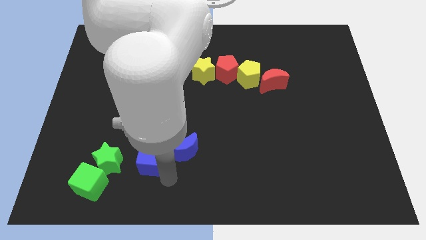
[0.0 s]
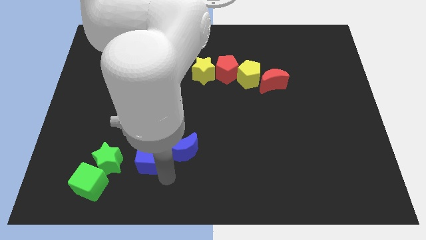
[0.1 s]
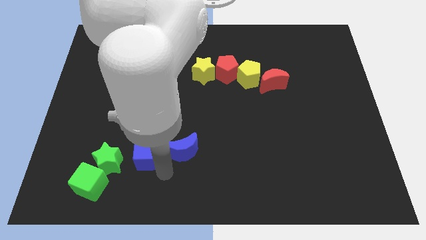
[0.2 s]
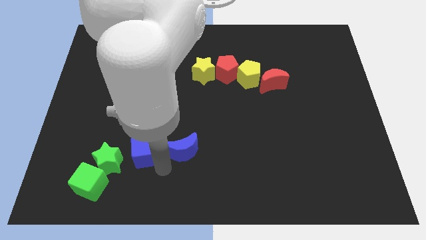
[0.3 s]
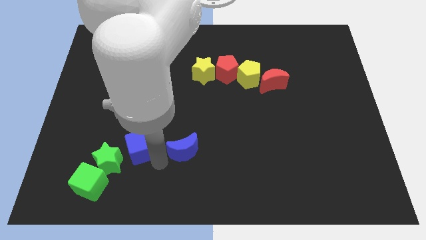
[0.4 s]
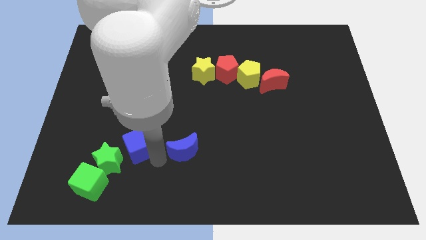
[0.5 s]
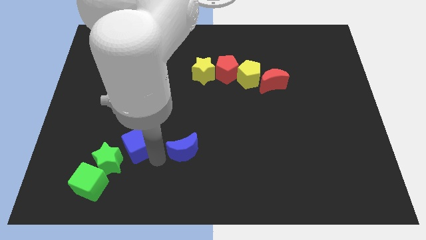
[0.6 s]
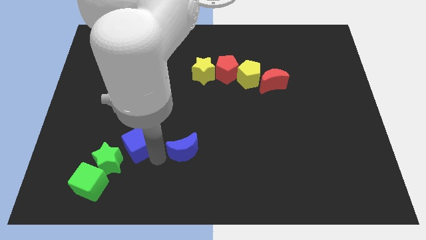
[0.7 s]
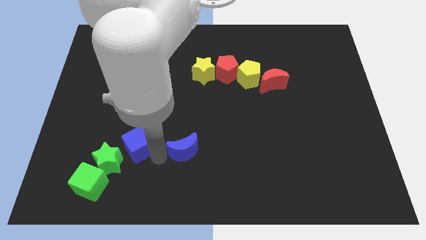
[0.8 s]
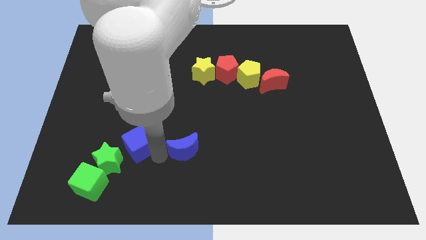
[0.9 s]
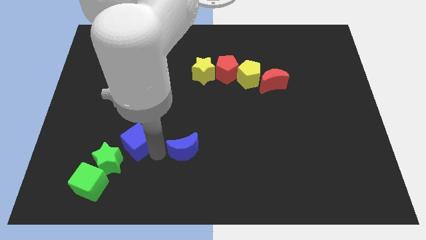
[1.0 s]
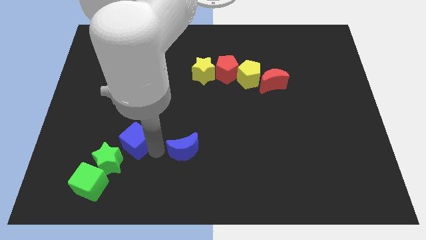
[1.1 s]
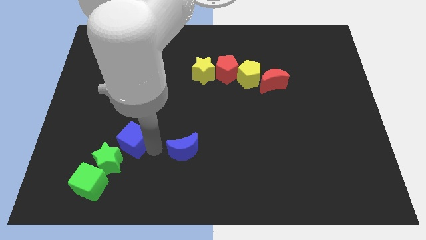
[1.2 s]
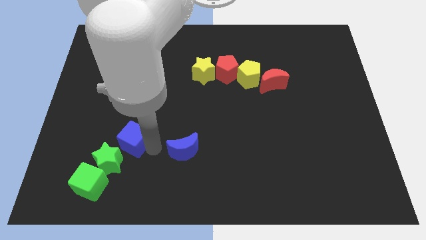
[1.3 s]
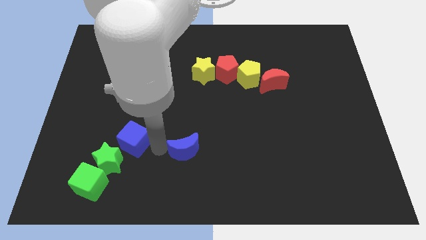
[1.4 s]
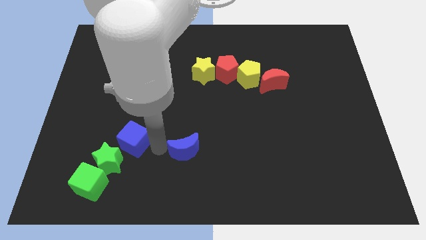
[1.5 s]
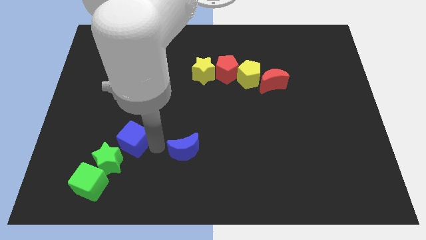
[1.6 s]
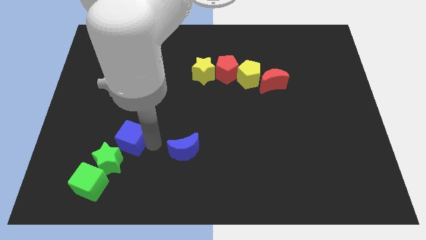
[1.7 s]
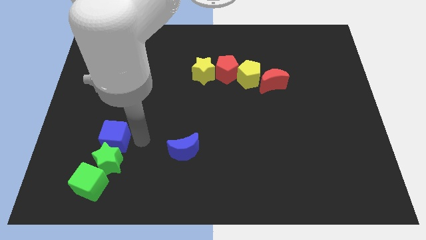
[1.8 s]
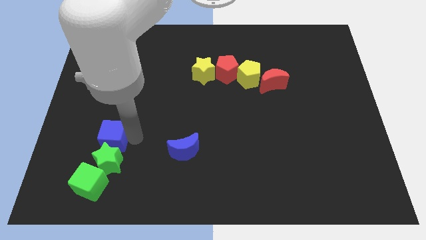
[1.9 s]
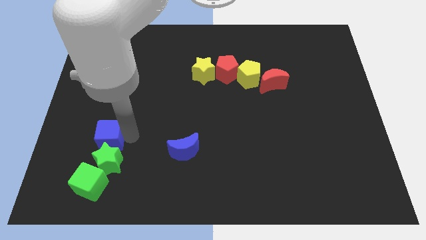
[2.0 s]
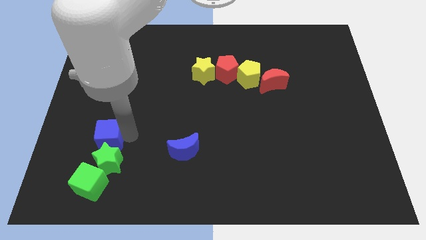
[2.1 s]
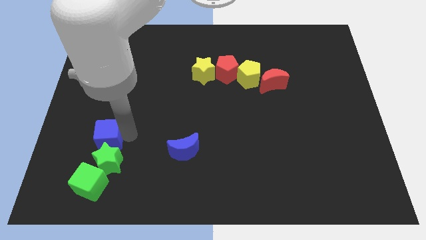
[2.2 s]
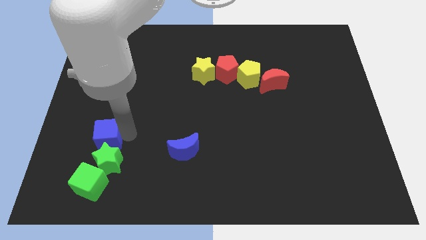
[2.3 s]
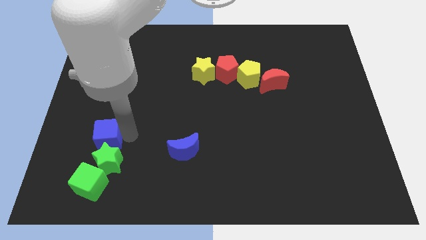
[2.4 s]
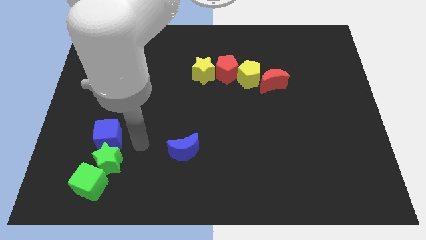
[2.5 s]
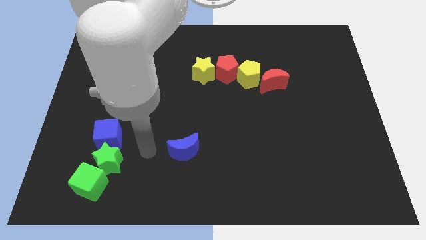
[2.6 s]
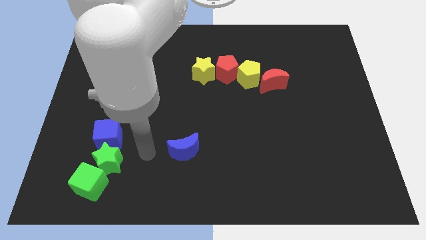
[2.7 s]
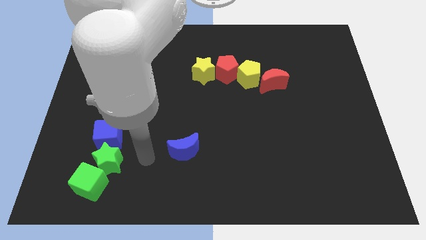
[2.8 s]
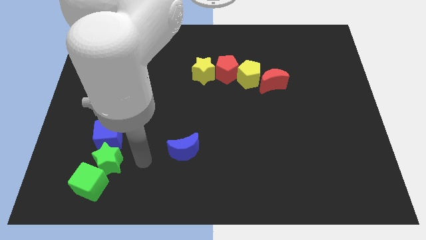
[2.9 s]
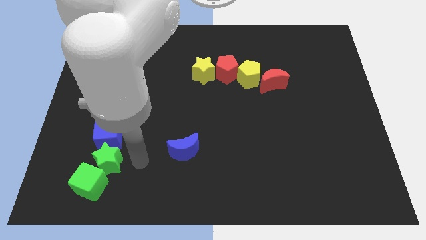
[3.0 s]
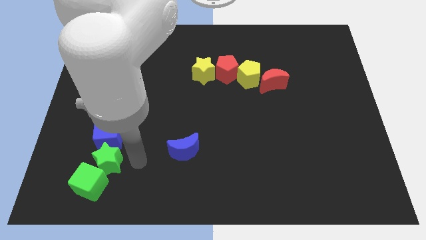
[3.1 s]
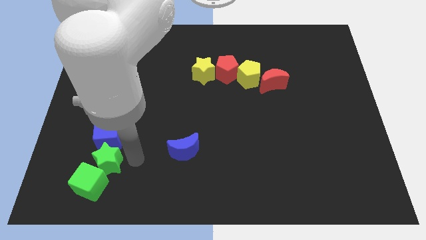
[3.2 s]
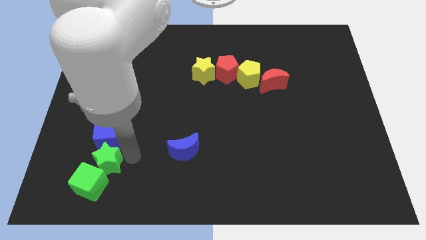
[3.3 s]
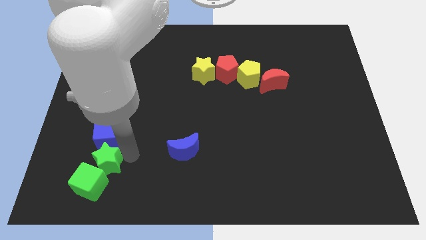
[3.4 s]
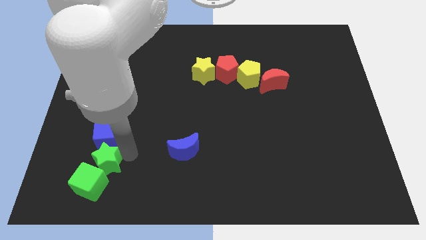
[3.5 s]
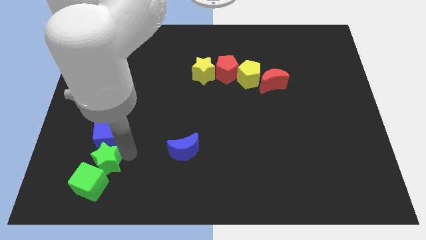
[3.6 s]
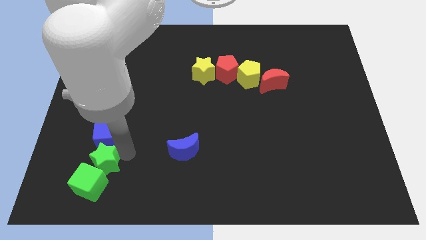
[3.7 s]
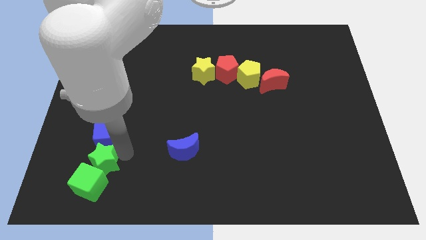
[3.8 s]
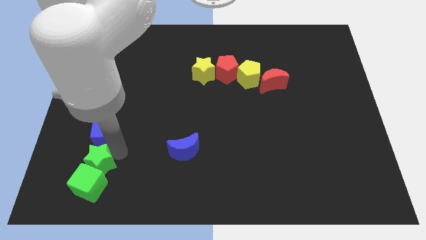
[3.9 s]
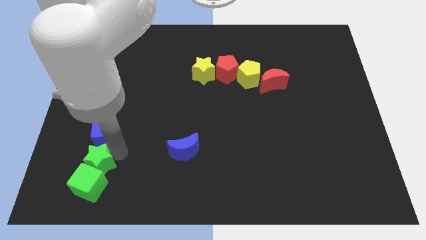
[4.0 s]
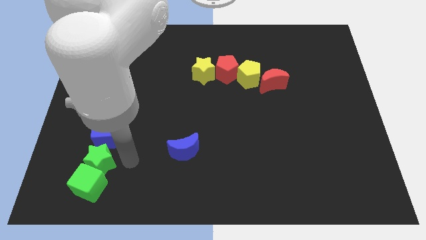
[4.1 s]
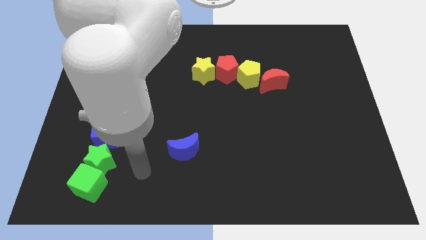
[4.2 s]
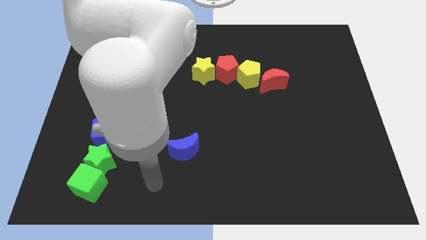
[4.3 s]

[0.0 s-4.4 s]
slightly drag the blue cube towards the left side up to the green star

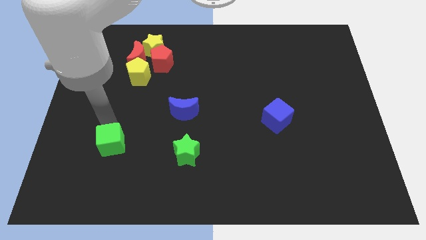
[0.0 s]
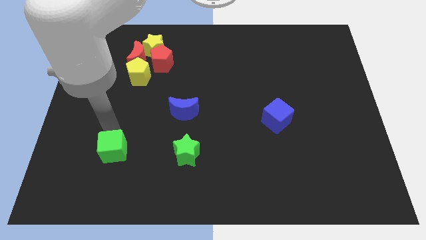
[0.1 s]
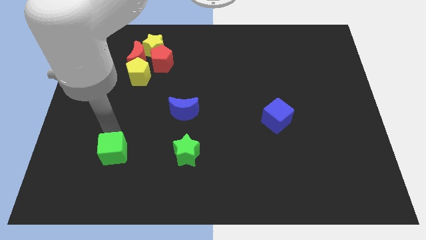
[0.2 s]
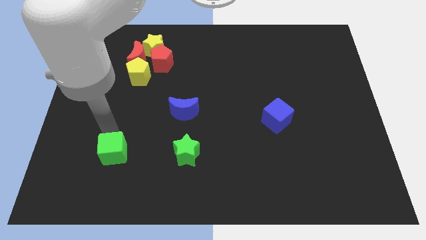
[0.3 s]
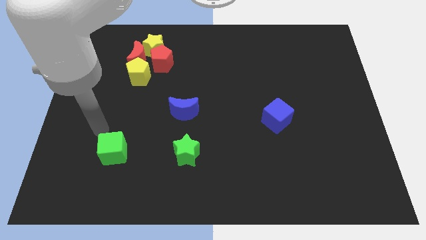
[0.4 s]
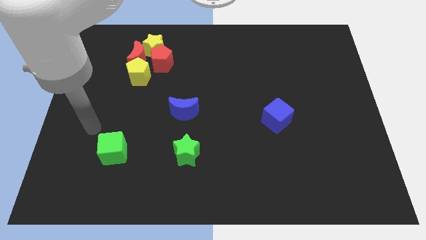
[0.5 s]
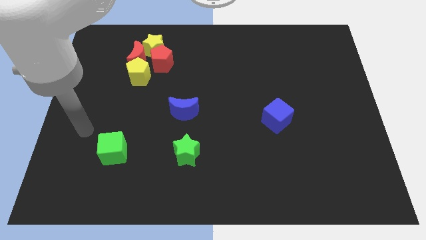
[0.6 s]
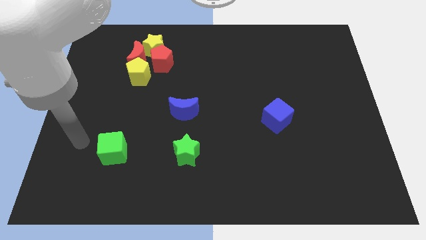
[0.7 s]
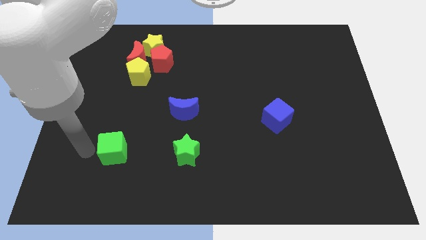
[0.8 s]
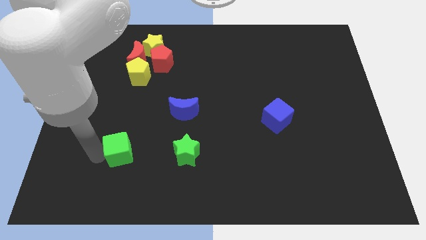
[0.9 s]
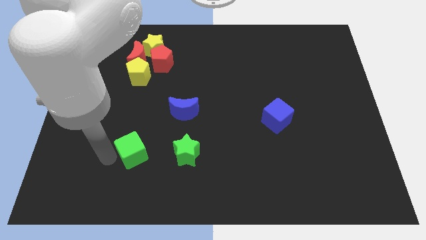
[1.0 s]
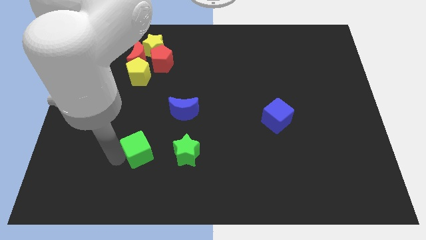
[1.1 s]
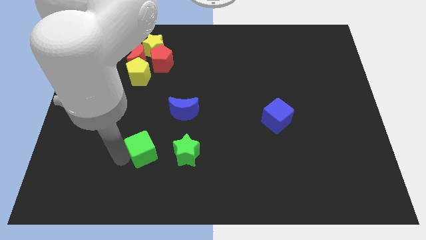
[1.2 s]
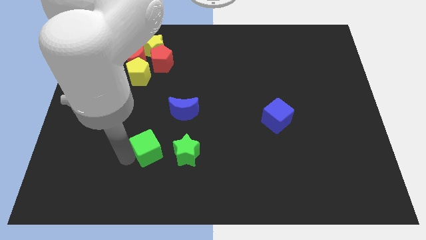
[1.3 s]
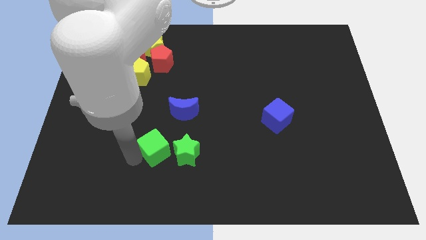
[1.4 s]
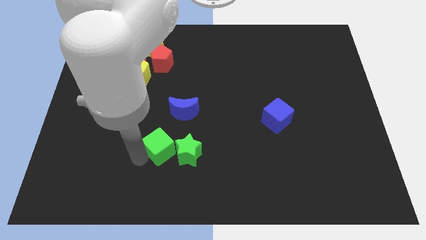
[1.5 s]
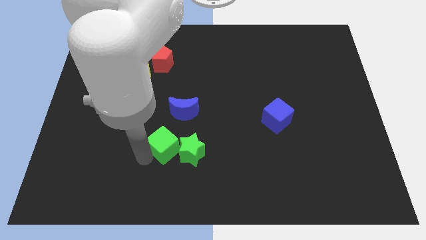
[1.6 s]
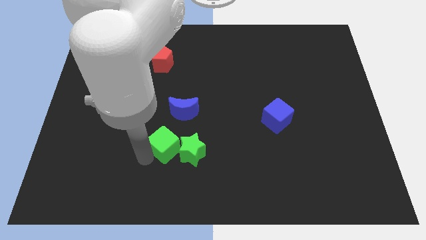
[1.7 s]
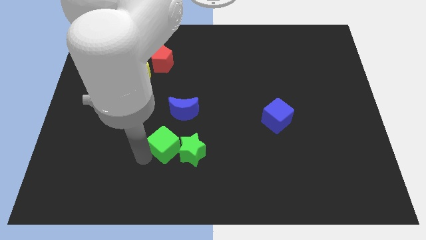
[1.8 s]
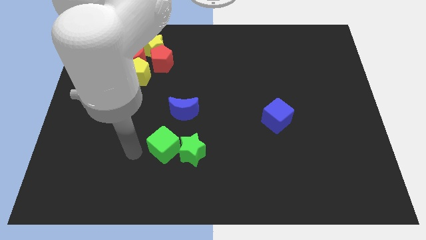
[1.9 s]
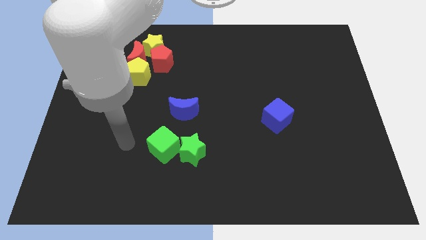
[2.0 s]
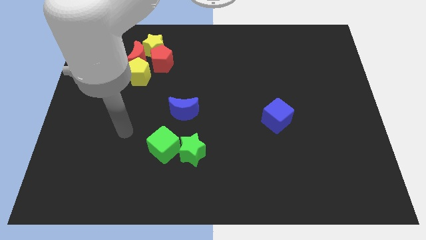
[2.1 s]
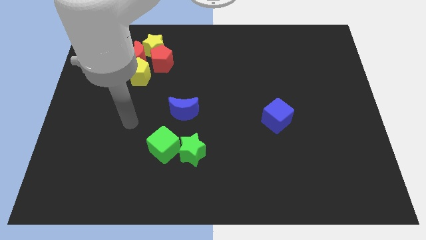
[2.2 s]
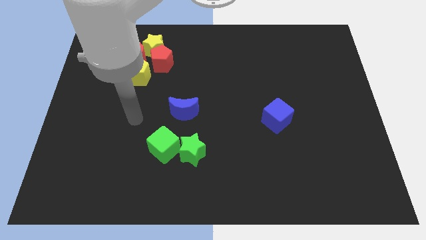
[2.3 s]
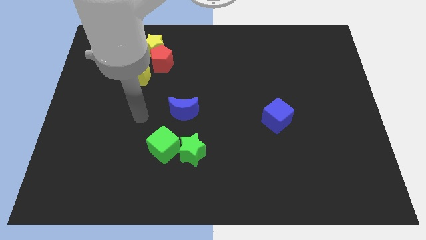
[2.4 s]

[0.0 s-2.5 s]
push green cube towards green star

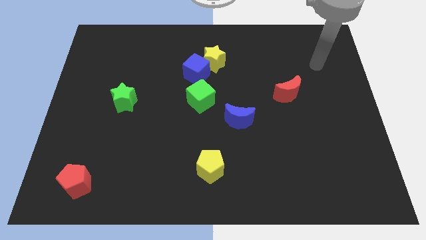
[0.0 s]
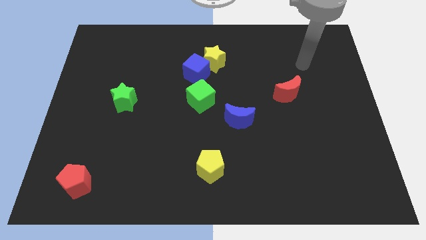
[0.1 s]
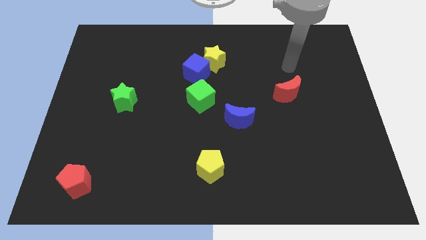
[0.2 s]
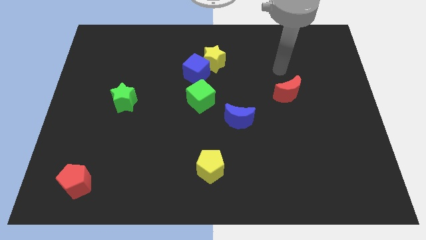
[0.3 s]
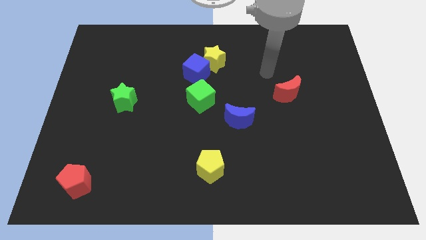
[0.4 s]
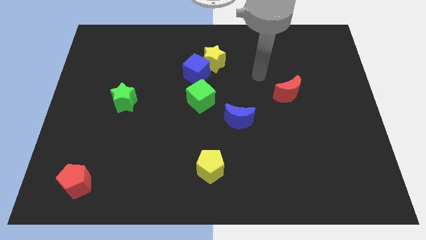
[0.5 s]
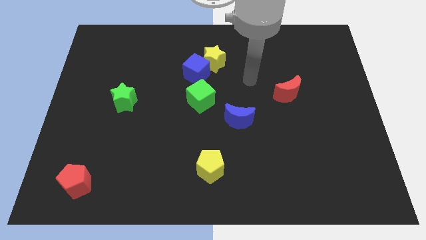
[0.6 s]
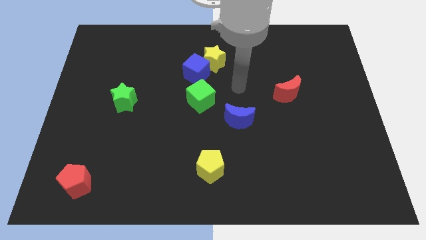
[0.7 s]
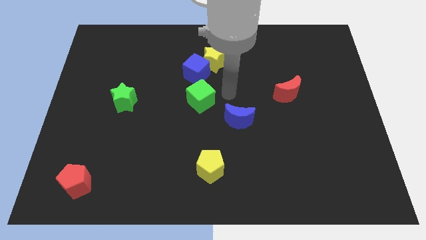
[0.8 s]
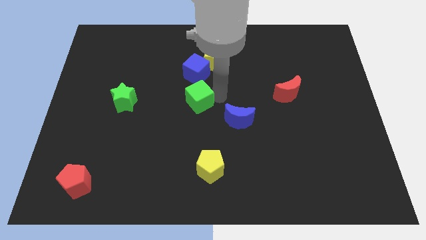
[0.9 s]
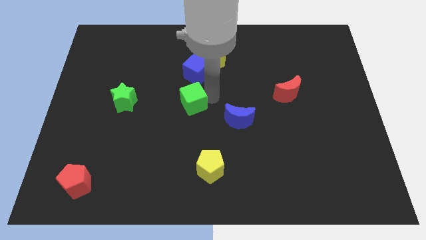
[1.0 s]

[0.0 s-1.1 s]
move the arm towards the green cube

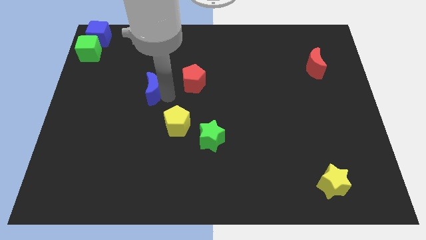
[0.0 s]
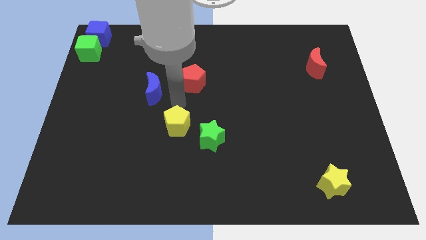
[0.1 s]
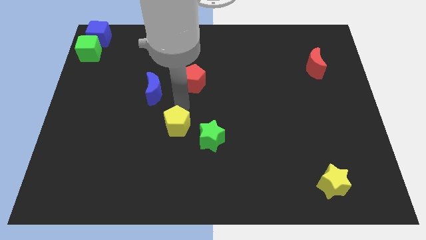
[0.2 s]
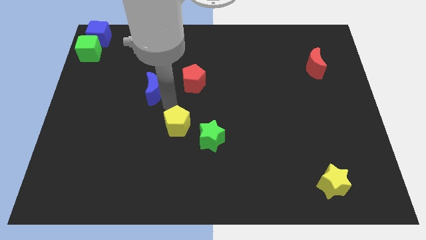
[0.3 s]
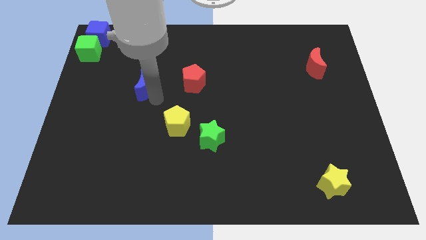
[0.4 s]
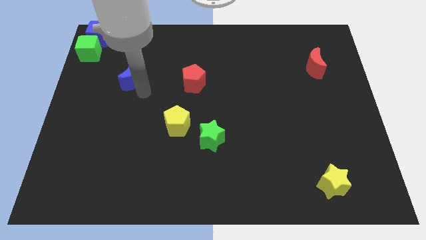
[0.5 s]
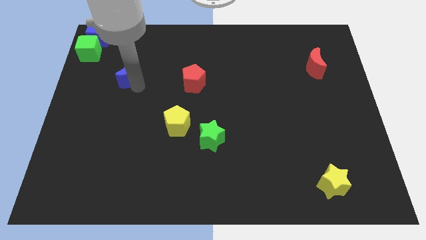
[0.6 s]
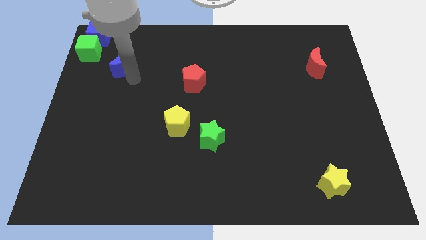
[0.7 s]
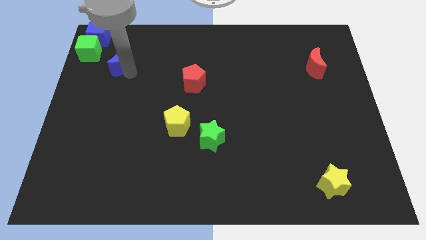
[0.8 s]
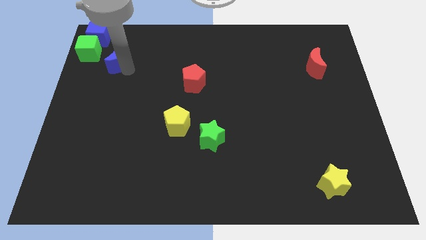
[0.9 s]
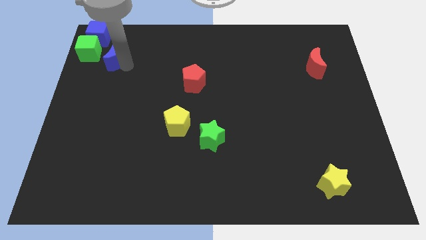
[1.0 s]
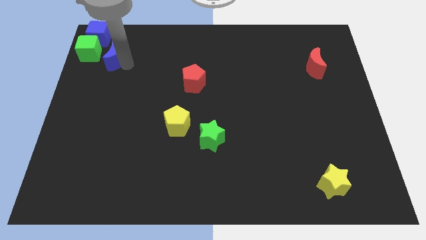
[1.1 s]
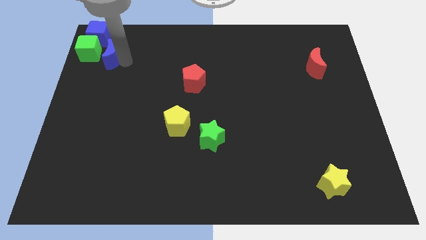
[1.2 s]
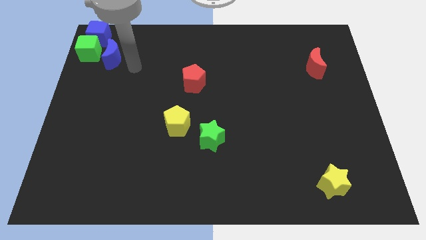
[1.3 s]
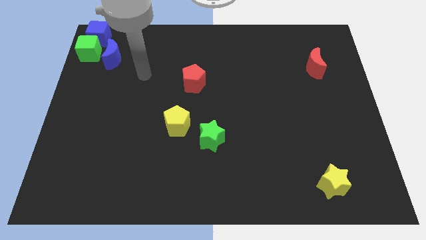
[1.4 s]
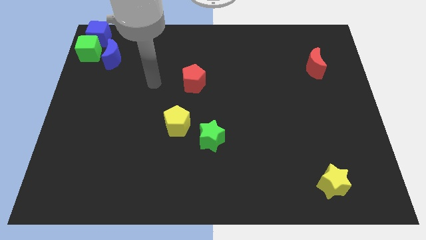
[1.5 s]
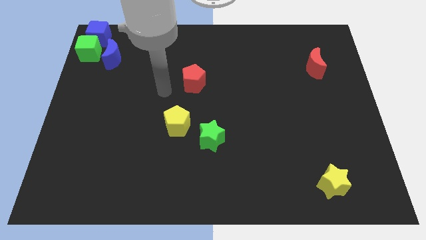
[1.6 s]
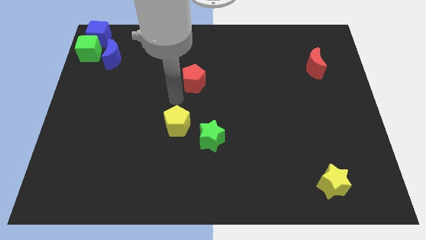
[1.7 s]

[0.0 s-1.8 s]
push the blue crescent to the right of the green cube
